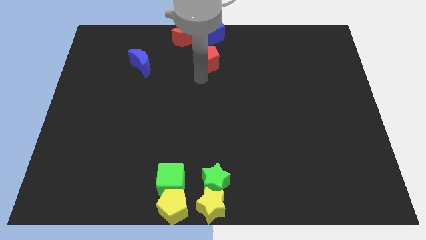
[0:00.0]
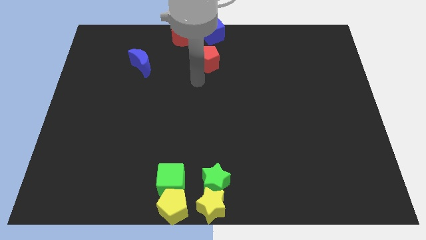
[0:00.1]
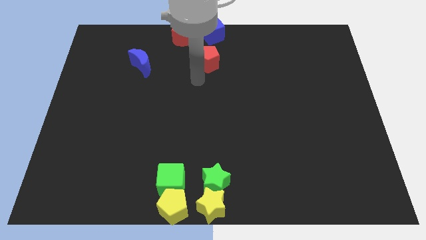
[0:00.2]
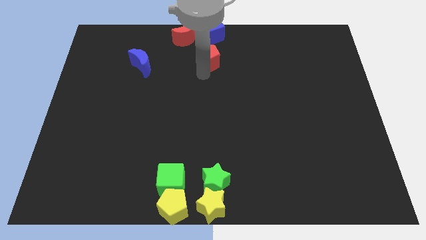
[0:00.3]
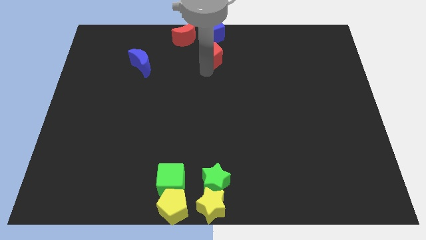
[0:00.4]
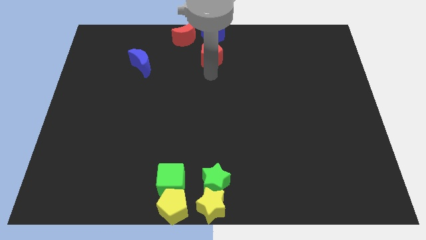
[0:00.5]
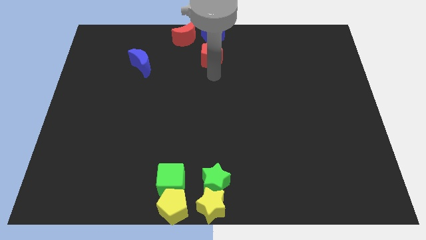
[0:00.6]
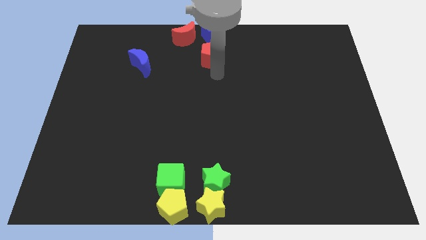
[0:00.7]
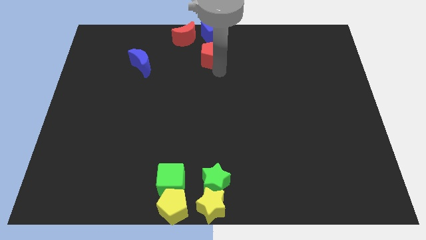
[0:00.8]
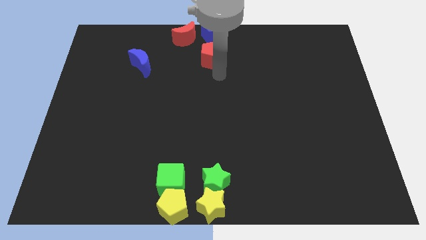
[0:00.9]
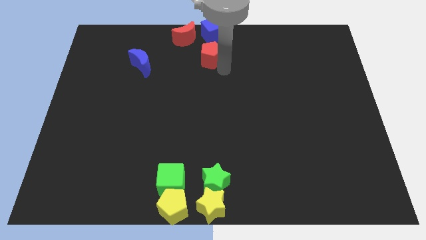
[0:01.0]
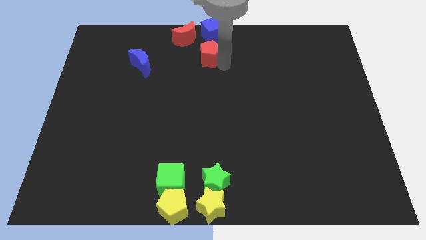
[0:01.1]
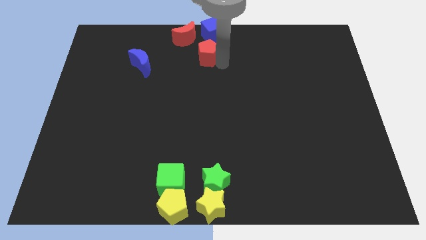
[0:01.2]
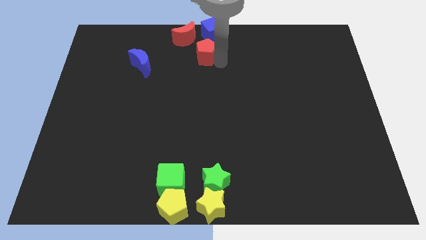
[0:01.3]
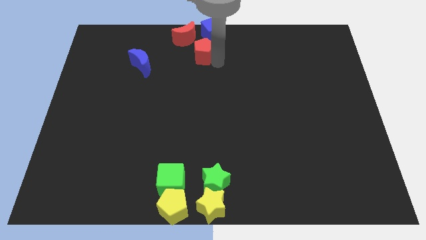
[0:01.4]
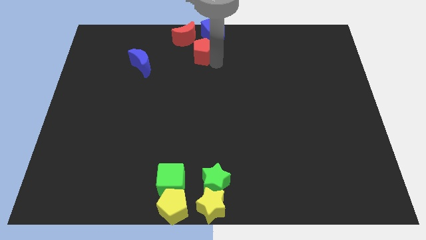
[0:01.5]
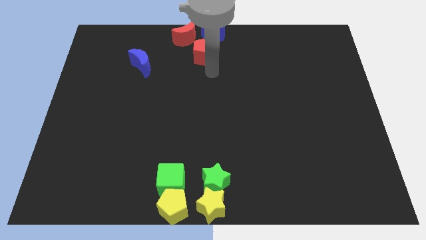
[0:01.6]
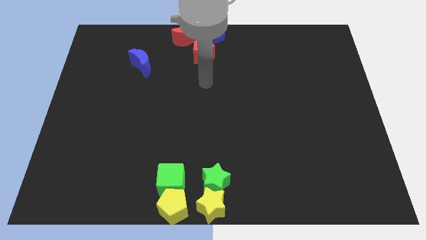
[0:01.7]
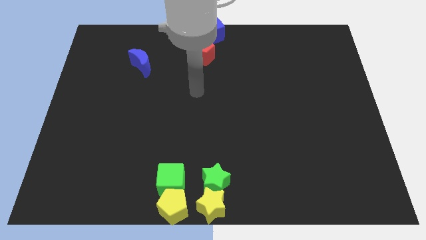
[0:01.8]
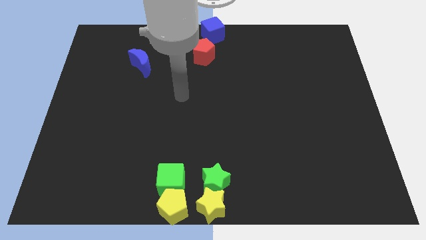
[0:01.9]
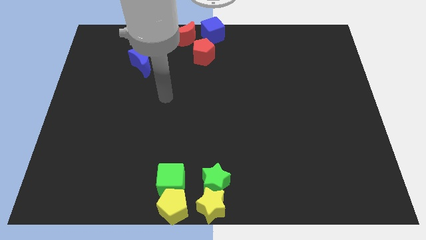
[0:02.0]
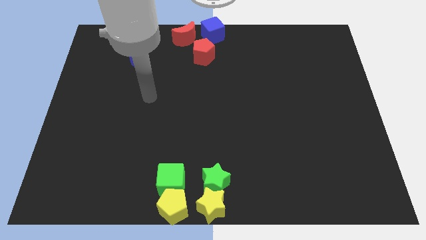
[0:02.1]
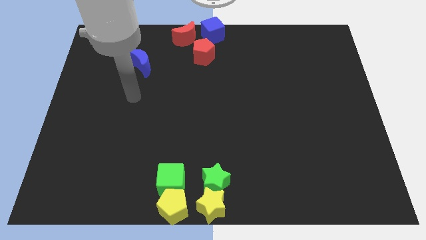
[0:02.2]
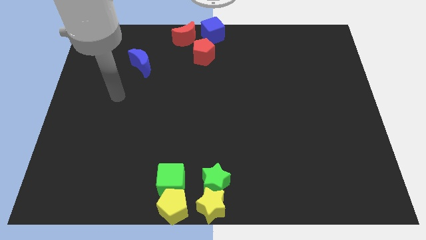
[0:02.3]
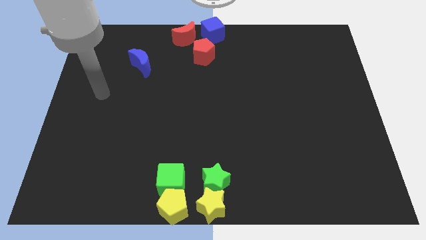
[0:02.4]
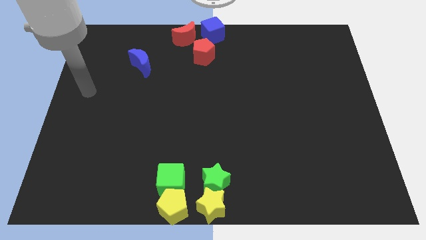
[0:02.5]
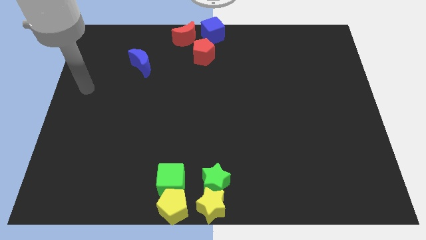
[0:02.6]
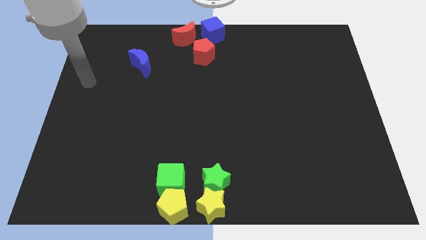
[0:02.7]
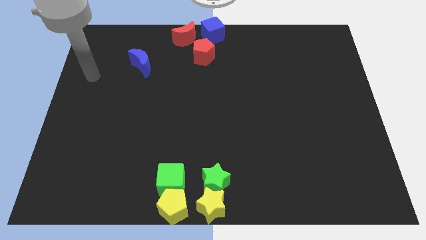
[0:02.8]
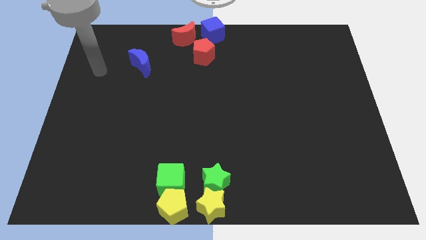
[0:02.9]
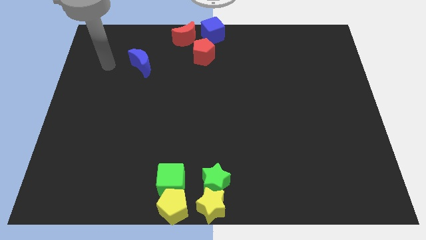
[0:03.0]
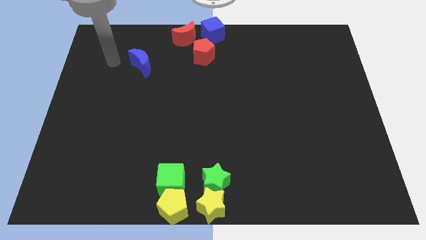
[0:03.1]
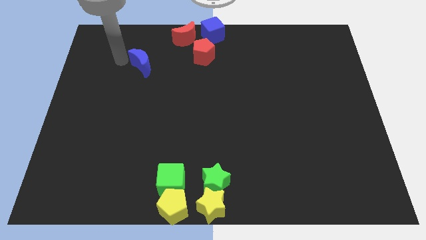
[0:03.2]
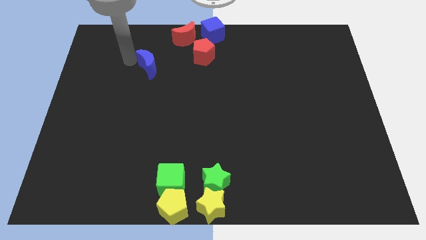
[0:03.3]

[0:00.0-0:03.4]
place your arm to the top left of blue moon

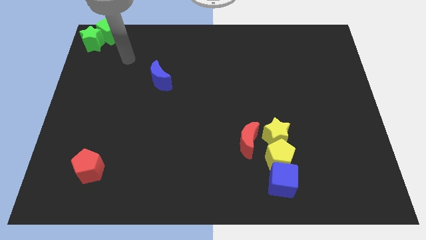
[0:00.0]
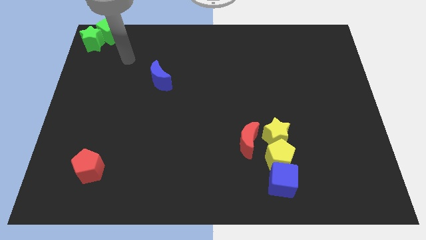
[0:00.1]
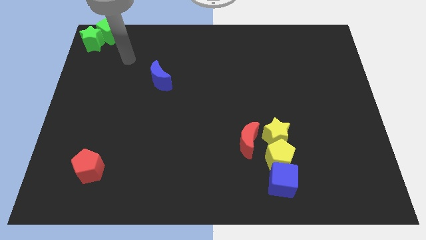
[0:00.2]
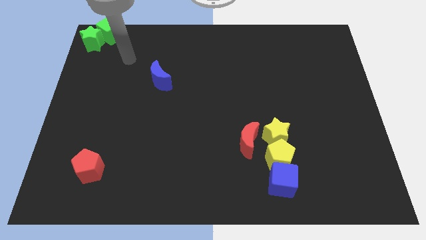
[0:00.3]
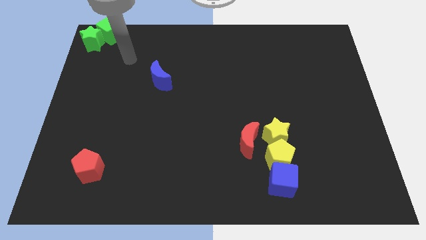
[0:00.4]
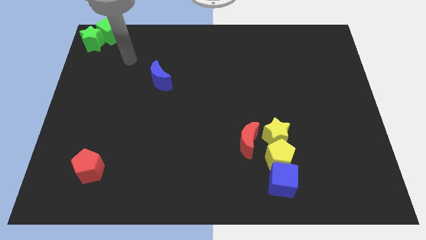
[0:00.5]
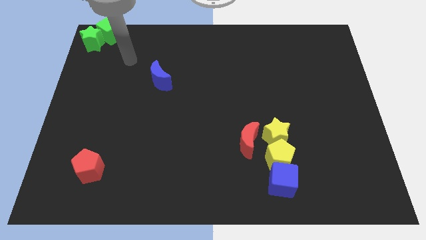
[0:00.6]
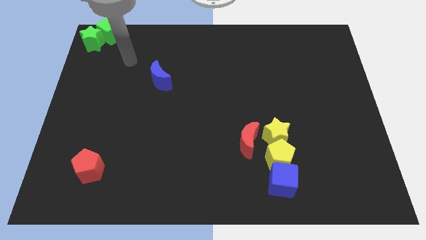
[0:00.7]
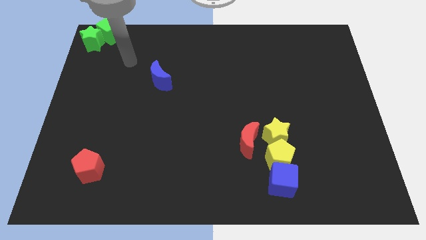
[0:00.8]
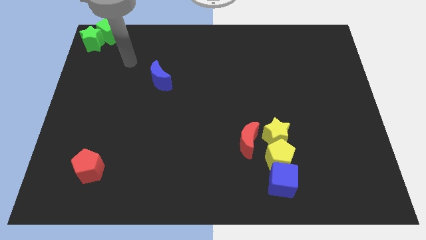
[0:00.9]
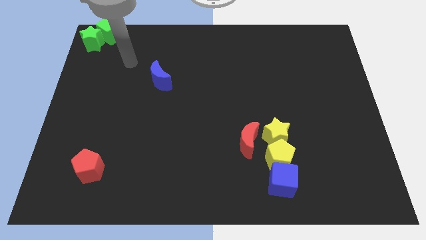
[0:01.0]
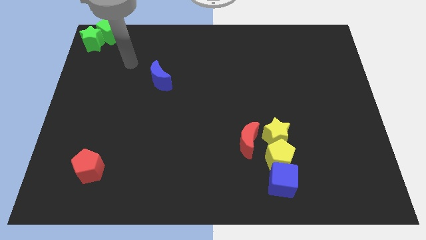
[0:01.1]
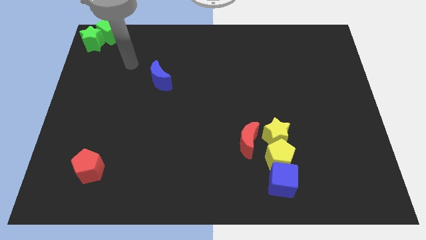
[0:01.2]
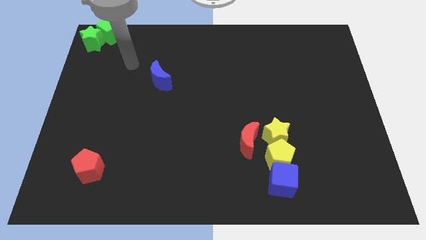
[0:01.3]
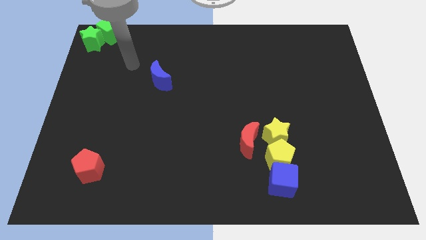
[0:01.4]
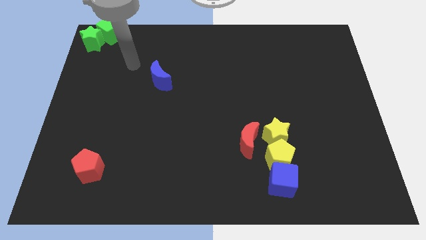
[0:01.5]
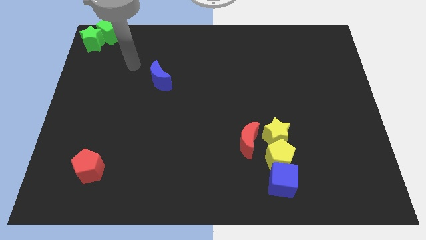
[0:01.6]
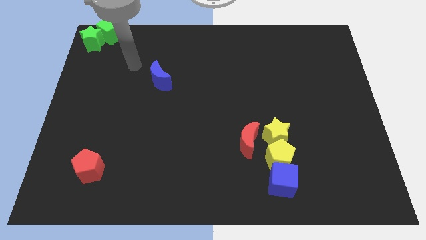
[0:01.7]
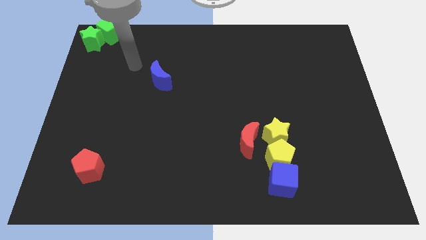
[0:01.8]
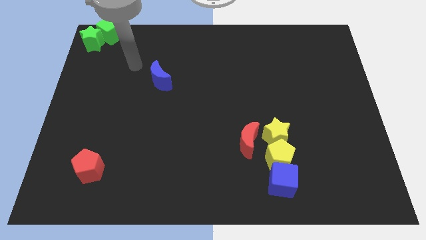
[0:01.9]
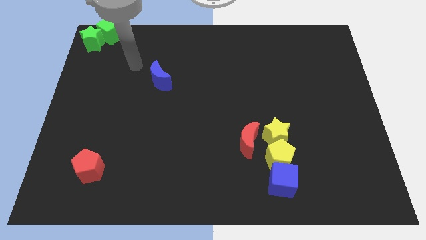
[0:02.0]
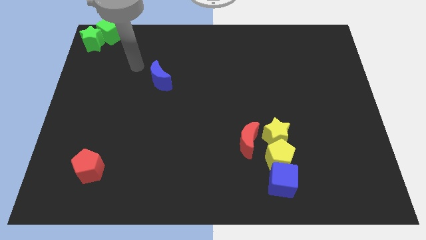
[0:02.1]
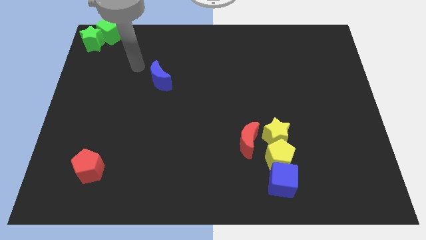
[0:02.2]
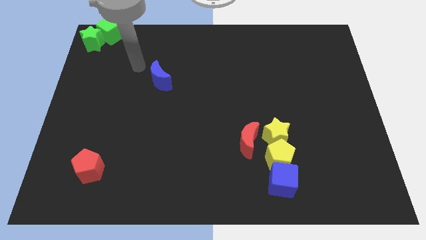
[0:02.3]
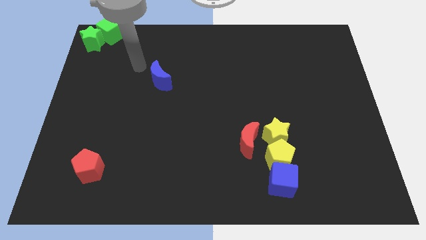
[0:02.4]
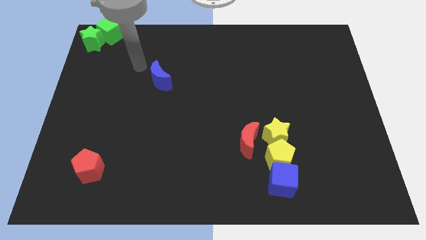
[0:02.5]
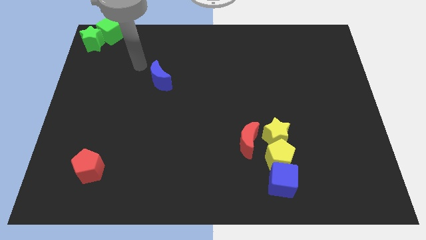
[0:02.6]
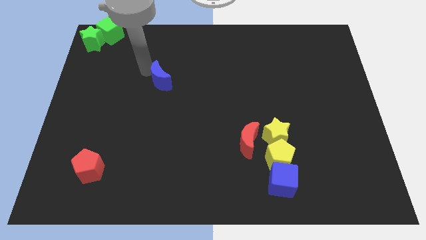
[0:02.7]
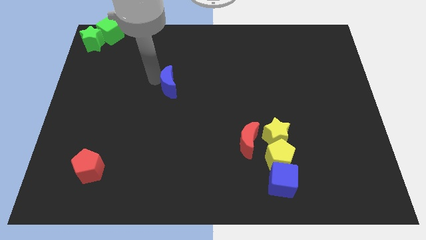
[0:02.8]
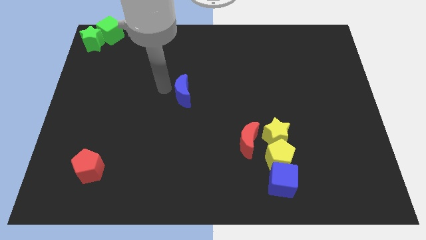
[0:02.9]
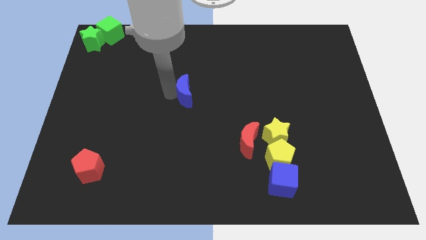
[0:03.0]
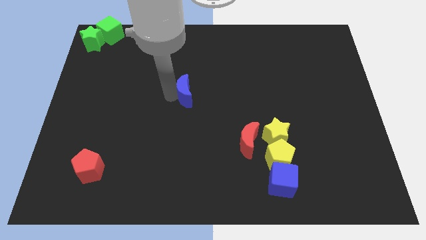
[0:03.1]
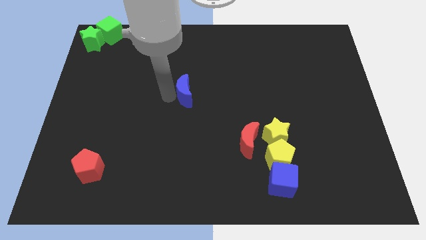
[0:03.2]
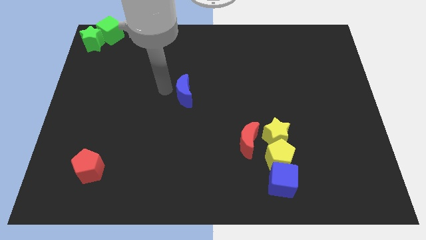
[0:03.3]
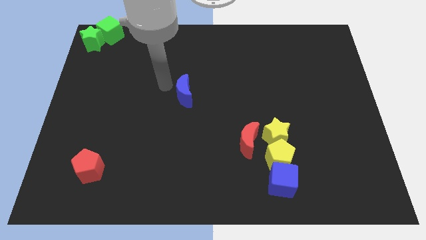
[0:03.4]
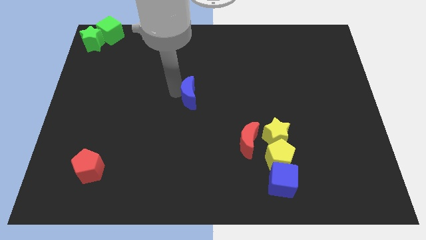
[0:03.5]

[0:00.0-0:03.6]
push the blue moon to the center

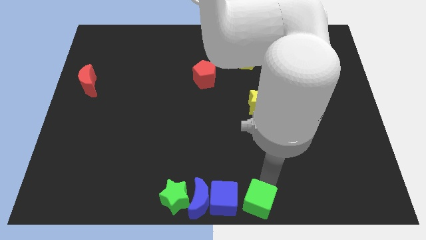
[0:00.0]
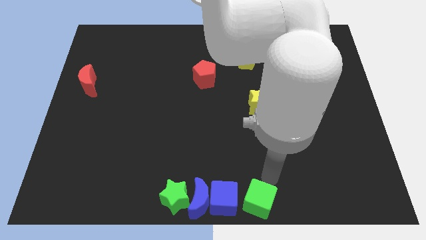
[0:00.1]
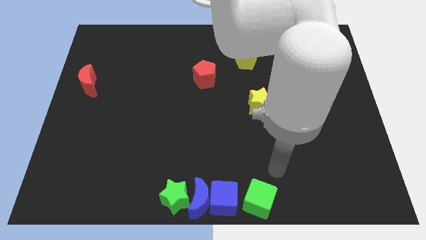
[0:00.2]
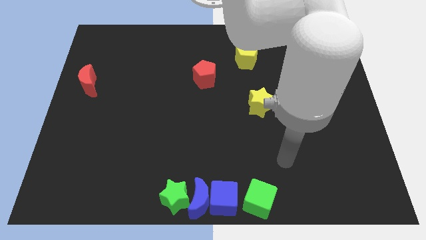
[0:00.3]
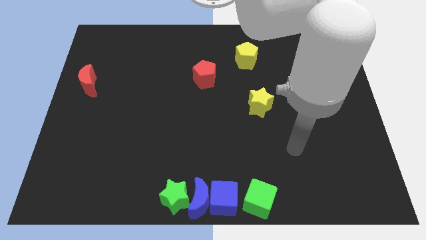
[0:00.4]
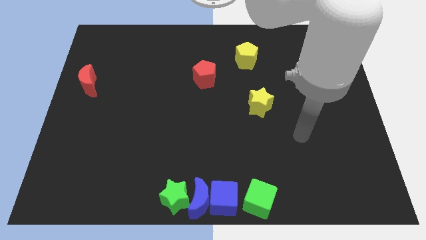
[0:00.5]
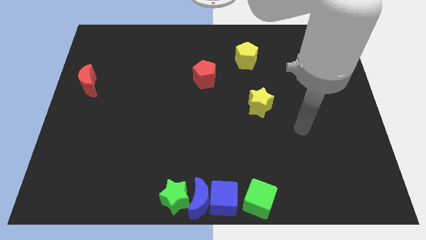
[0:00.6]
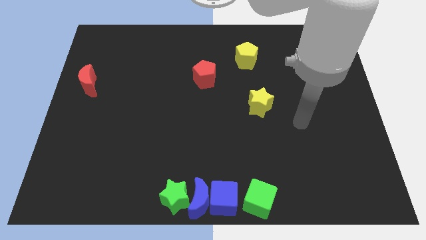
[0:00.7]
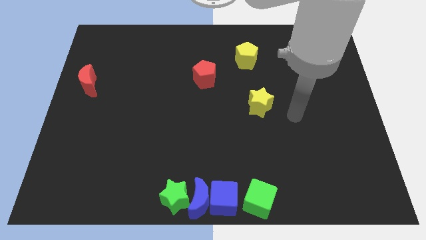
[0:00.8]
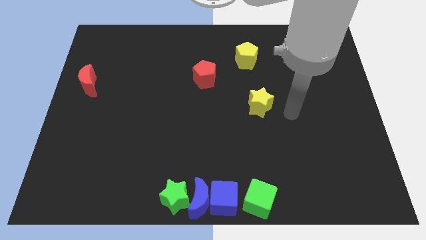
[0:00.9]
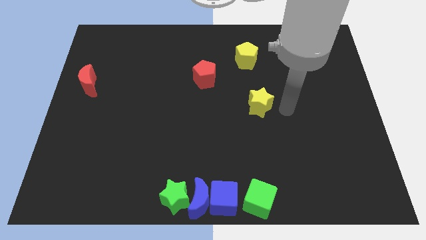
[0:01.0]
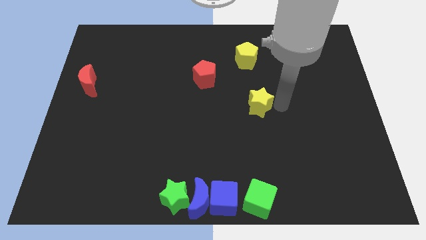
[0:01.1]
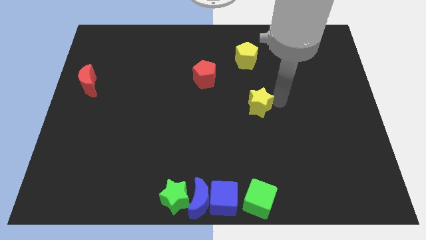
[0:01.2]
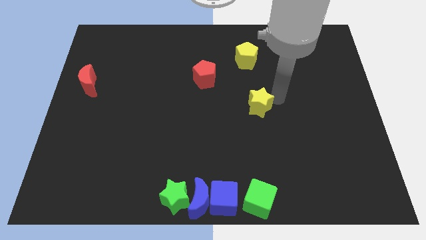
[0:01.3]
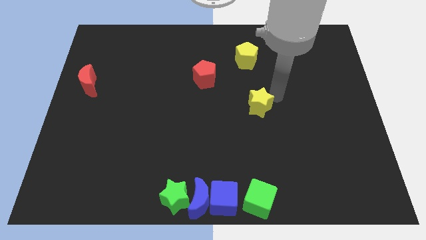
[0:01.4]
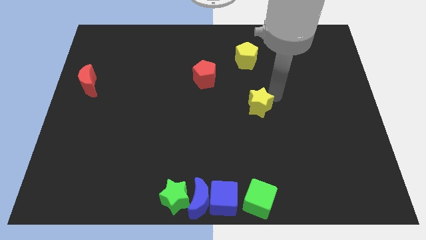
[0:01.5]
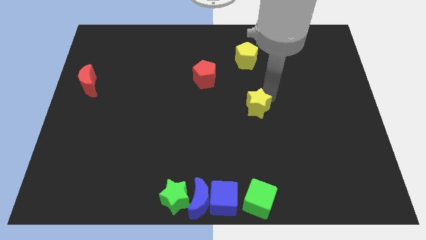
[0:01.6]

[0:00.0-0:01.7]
move your arm away from the green cube

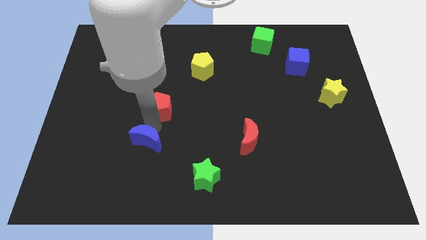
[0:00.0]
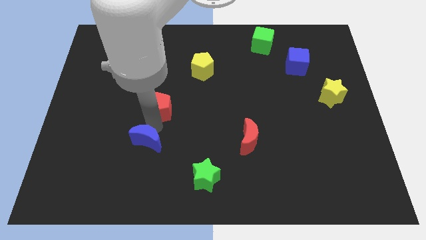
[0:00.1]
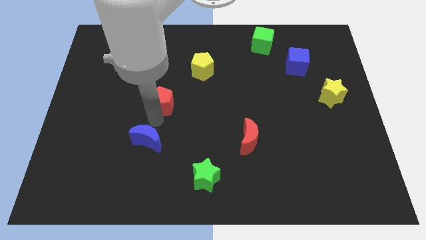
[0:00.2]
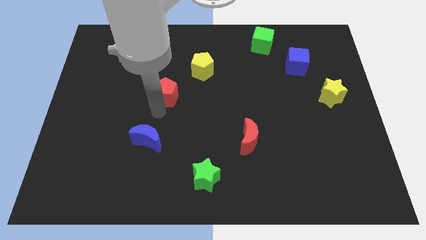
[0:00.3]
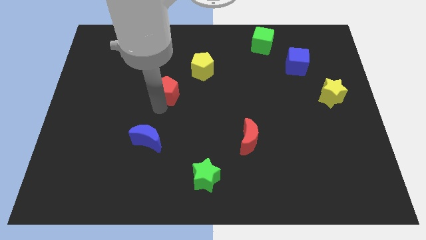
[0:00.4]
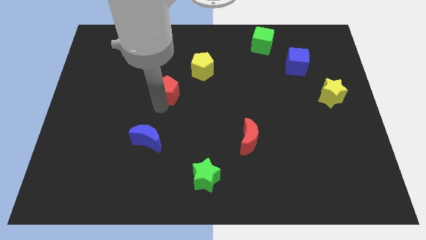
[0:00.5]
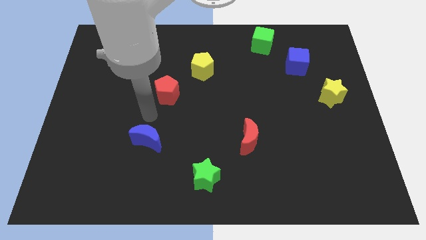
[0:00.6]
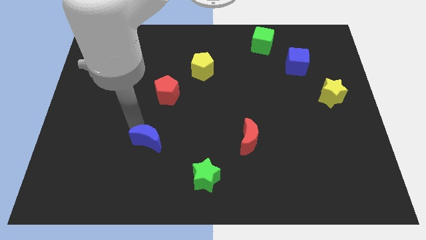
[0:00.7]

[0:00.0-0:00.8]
slightly move the red pentagon diagonally to the bottom left of the yellow pentagon
